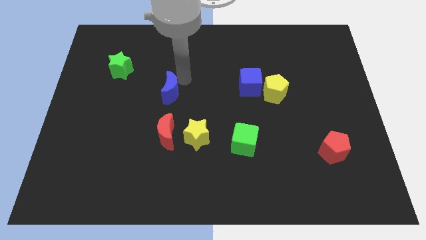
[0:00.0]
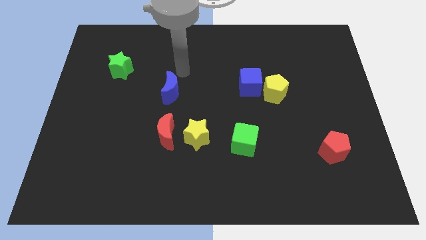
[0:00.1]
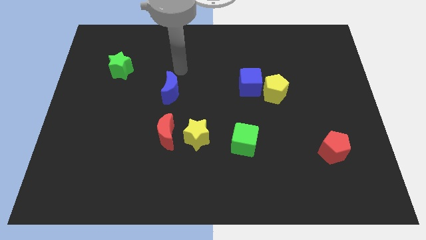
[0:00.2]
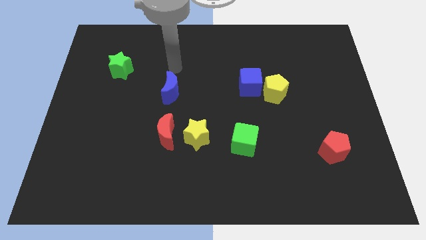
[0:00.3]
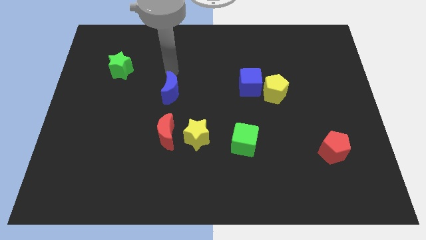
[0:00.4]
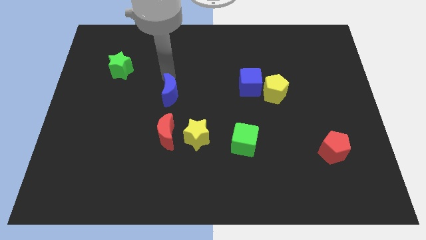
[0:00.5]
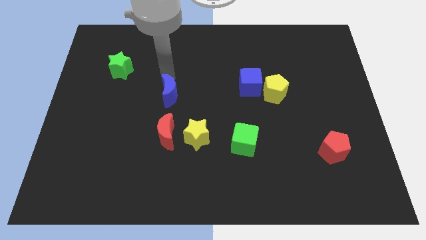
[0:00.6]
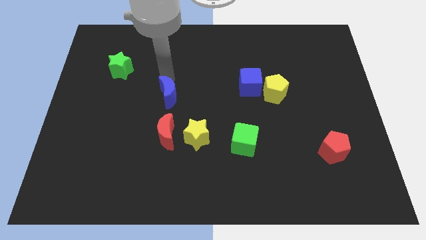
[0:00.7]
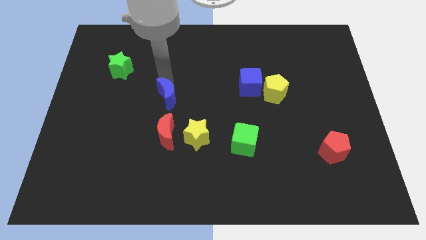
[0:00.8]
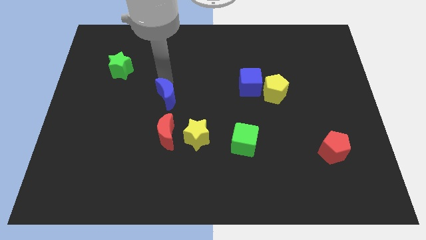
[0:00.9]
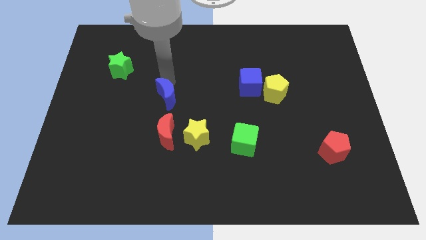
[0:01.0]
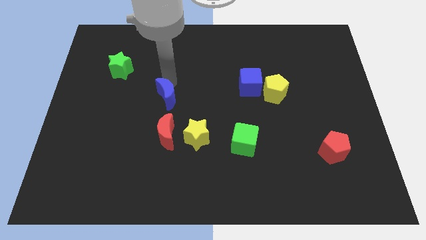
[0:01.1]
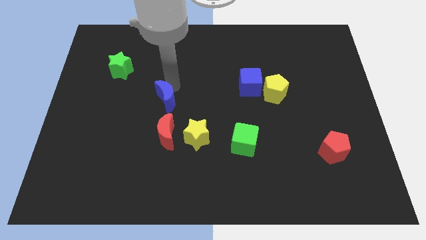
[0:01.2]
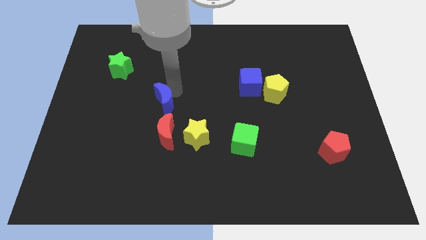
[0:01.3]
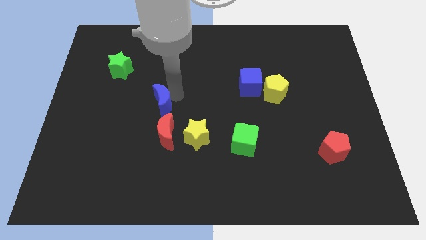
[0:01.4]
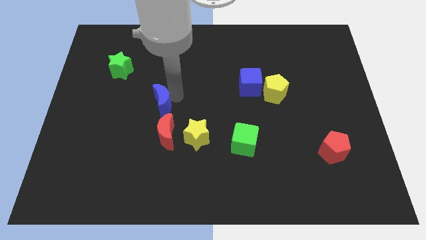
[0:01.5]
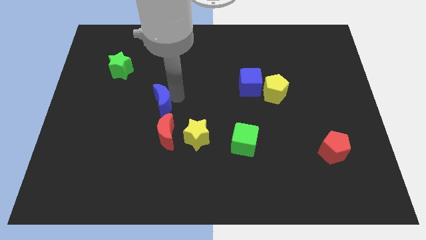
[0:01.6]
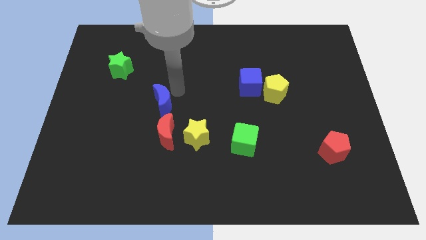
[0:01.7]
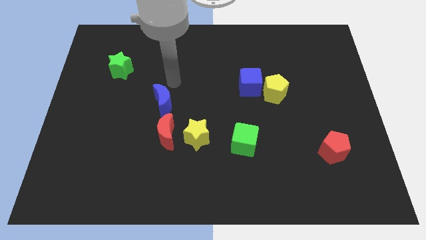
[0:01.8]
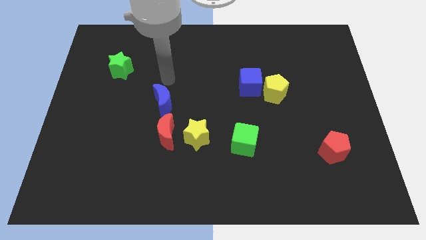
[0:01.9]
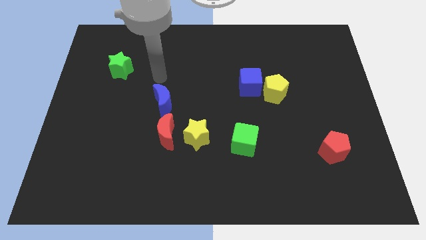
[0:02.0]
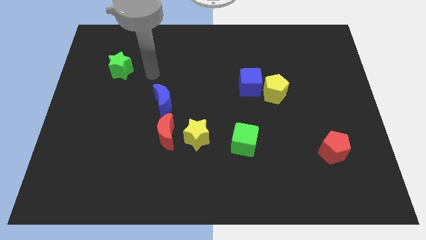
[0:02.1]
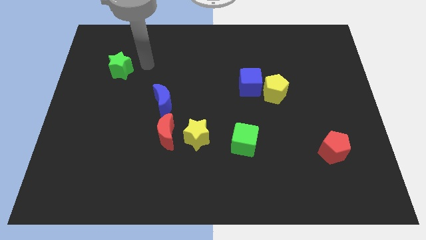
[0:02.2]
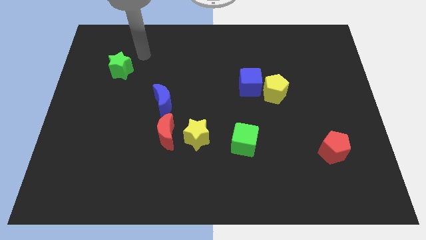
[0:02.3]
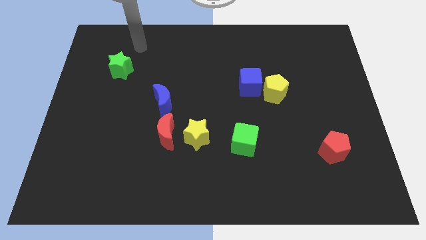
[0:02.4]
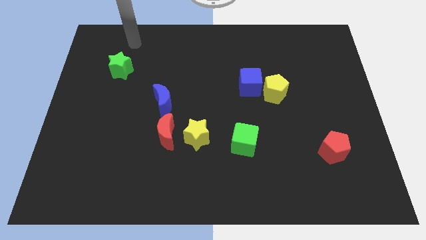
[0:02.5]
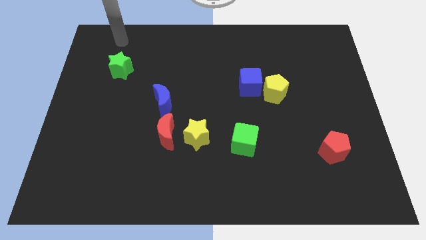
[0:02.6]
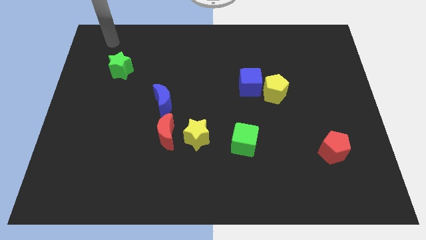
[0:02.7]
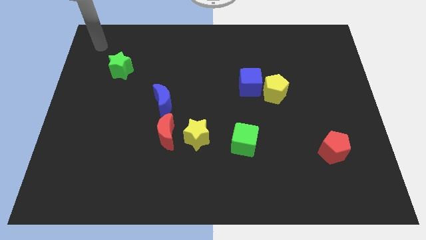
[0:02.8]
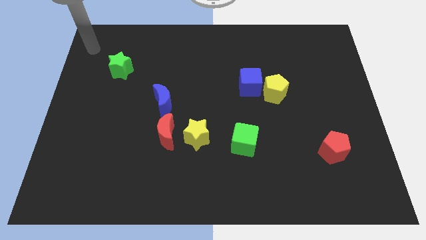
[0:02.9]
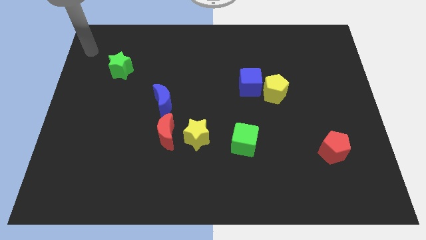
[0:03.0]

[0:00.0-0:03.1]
place the arm at the top left corner of the board

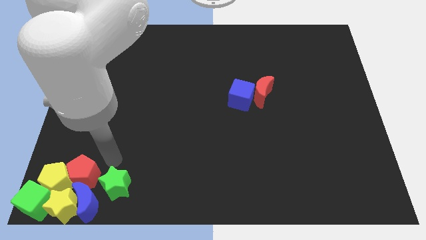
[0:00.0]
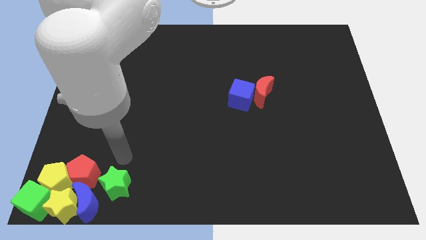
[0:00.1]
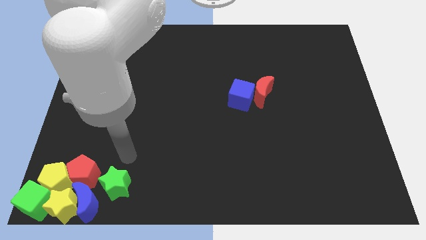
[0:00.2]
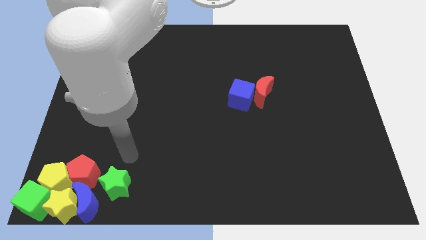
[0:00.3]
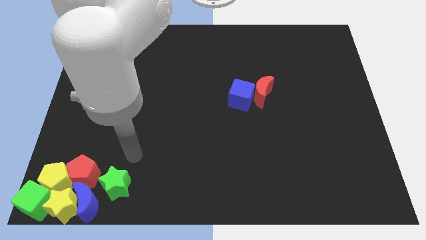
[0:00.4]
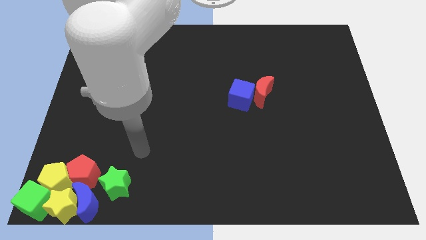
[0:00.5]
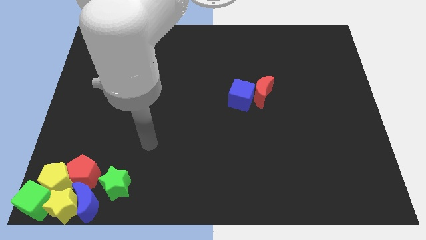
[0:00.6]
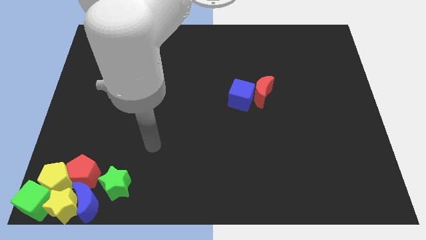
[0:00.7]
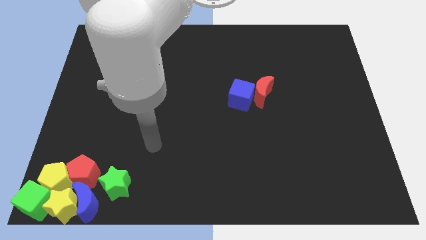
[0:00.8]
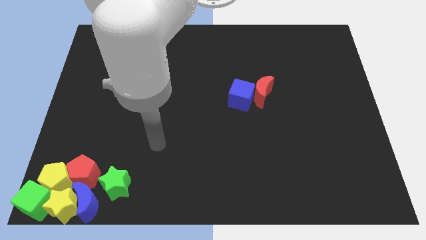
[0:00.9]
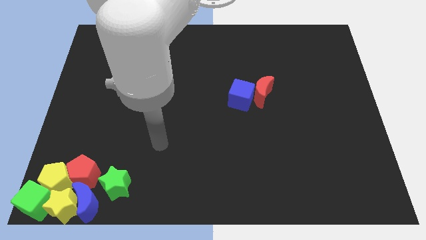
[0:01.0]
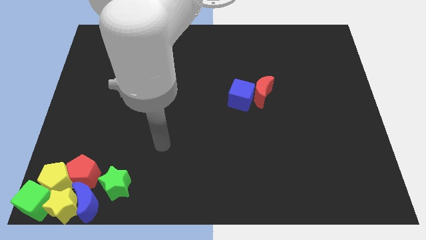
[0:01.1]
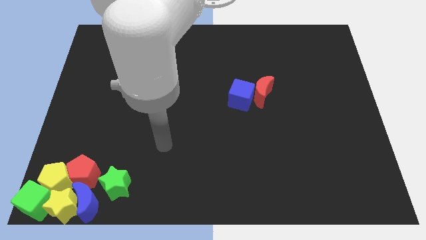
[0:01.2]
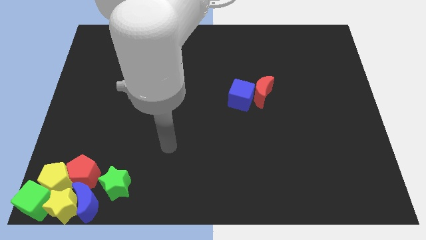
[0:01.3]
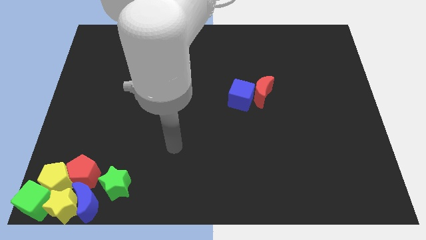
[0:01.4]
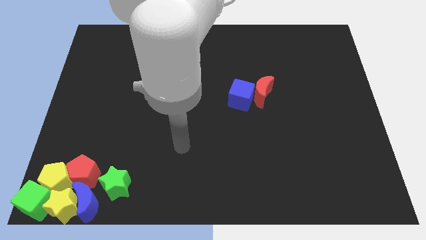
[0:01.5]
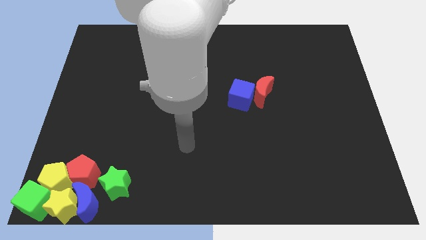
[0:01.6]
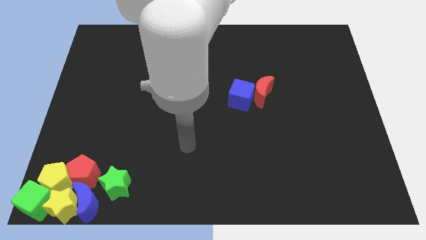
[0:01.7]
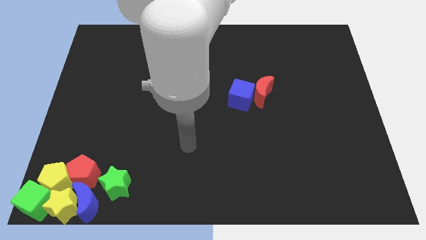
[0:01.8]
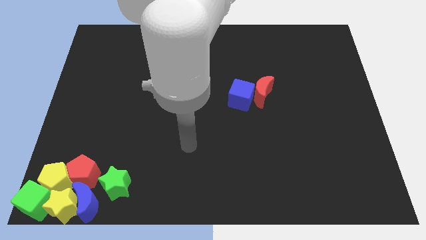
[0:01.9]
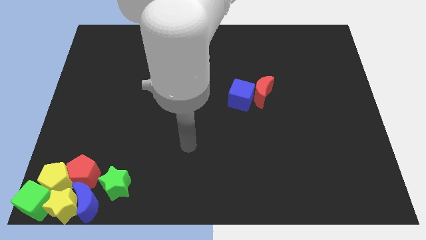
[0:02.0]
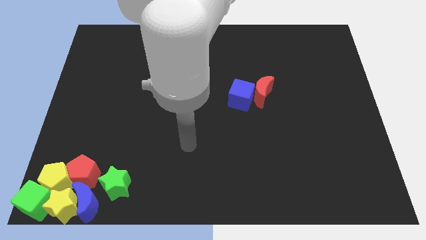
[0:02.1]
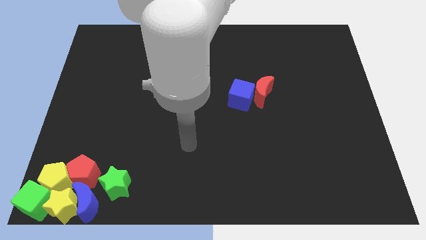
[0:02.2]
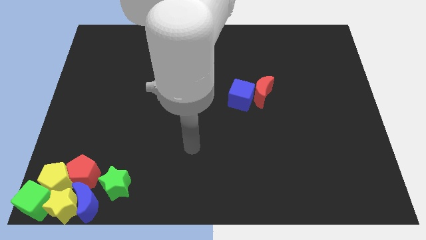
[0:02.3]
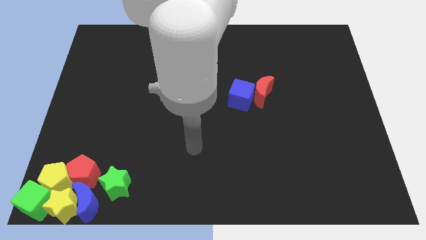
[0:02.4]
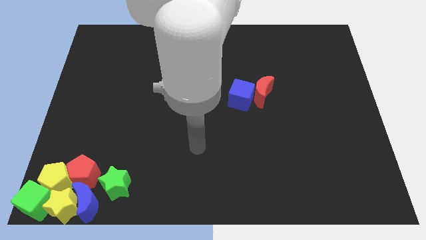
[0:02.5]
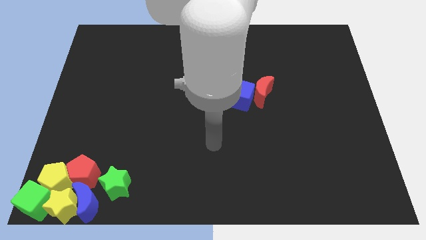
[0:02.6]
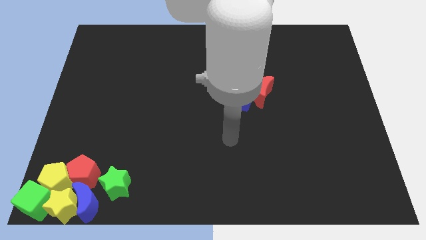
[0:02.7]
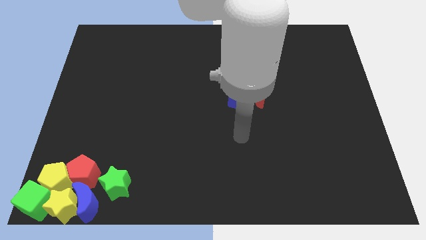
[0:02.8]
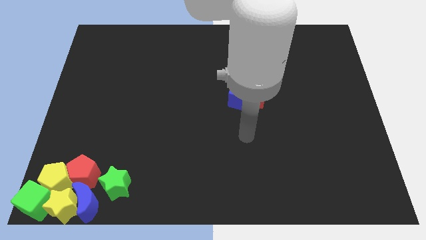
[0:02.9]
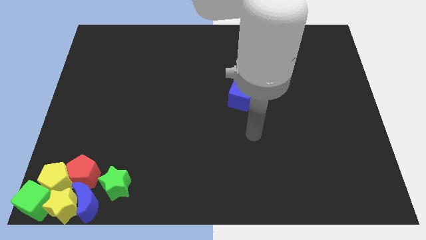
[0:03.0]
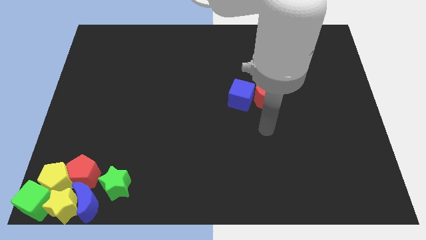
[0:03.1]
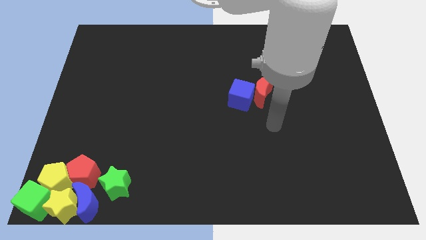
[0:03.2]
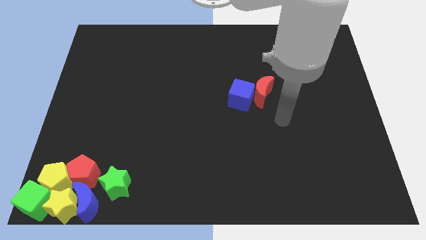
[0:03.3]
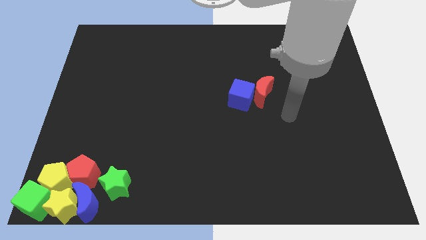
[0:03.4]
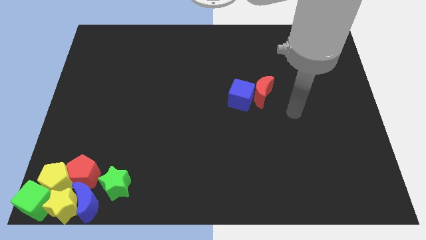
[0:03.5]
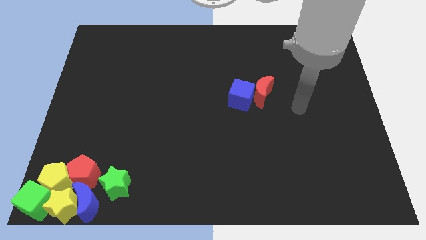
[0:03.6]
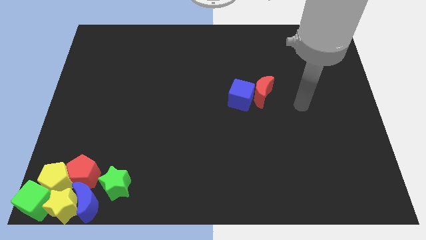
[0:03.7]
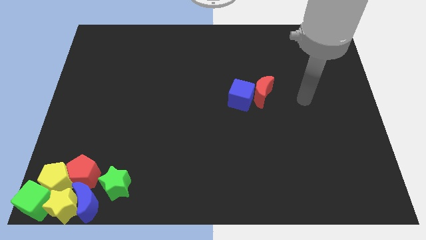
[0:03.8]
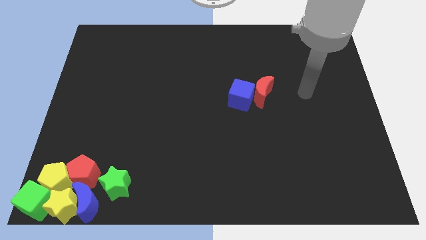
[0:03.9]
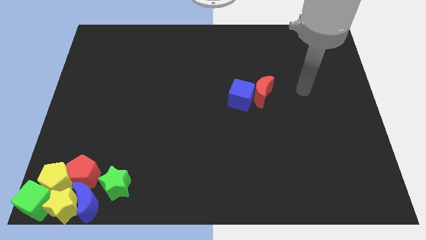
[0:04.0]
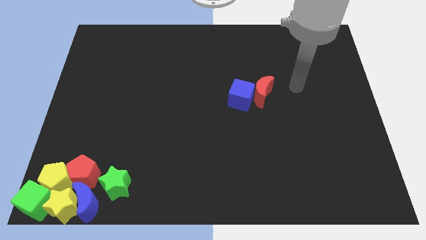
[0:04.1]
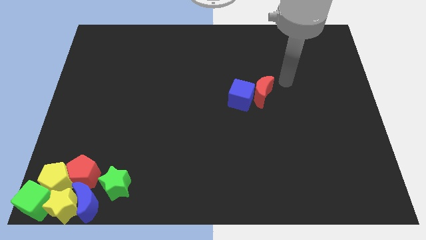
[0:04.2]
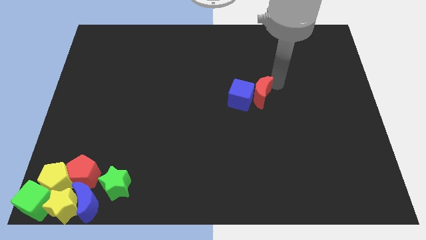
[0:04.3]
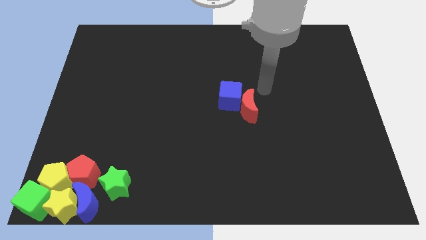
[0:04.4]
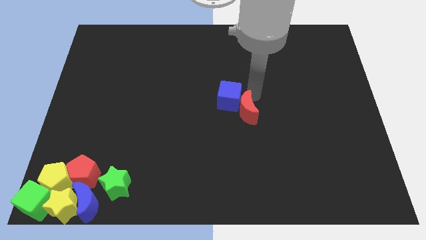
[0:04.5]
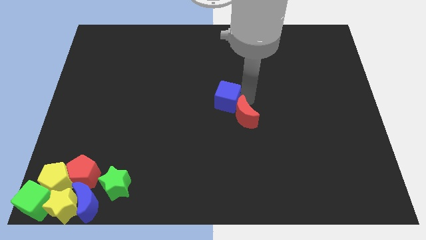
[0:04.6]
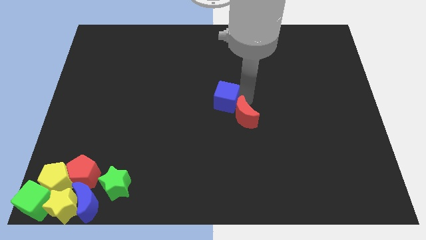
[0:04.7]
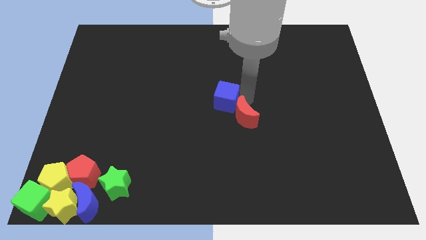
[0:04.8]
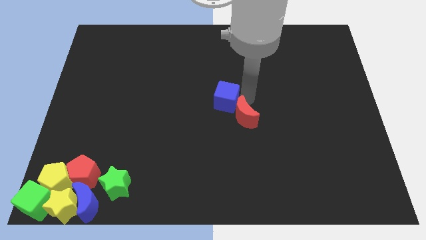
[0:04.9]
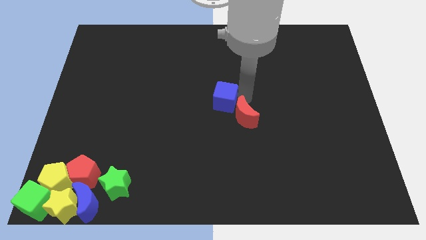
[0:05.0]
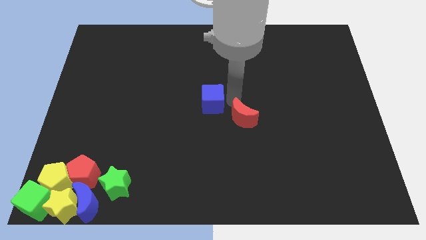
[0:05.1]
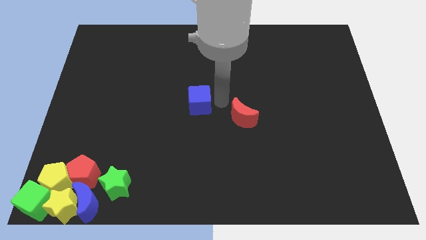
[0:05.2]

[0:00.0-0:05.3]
go and separate red moon and blue cube

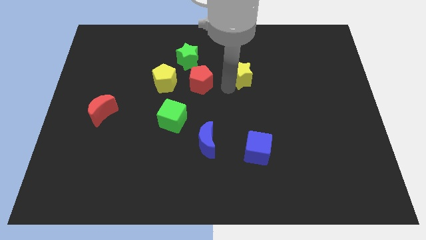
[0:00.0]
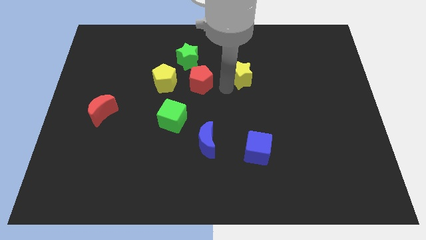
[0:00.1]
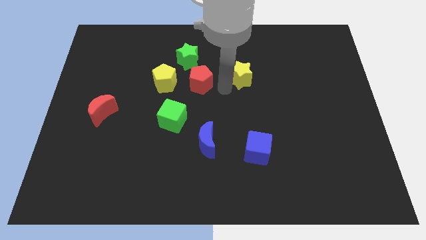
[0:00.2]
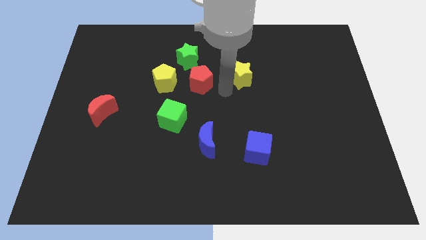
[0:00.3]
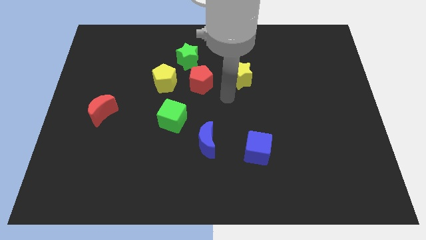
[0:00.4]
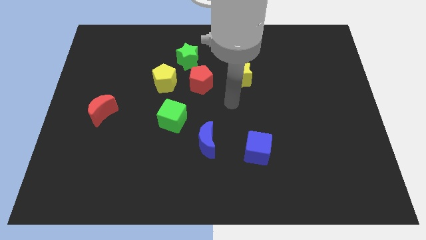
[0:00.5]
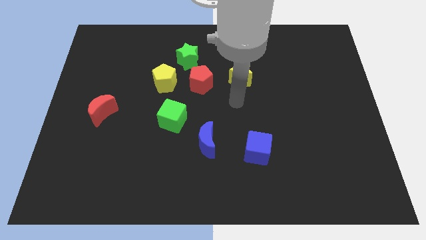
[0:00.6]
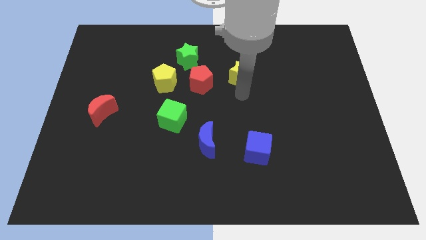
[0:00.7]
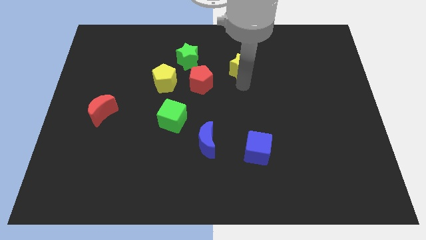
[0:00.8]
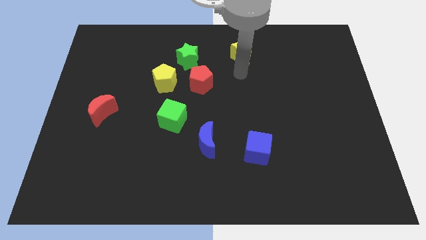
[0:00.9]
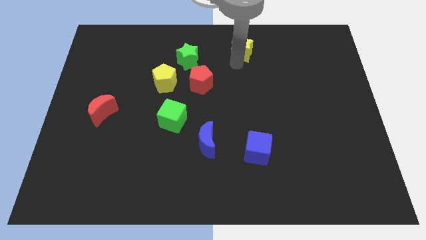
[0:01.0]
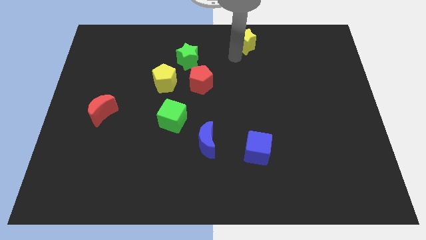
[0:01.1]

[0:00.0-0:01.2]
push the yellow star towards the top
